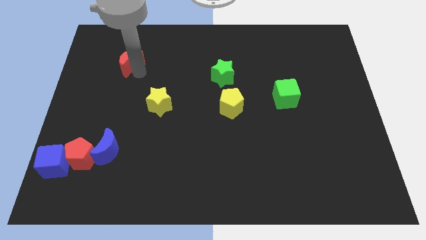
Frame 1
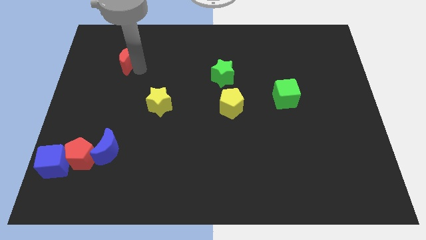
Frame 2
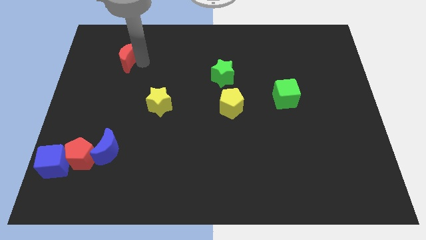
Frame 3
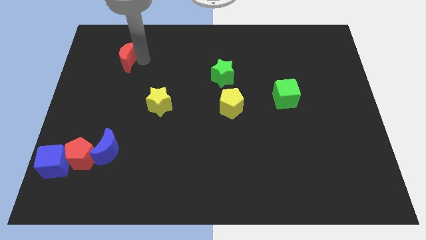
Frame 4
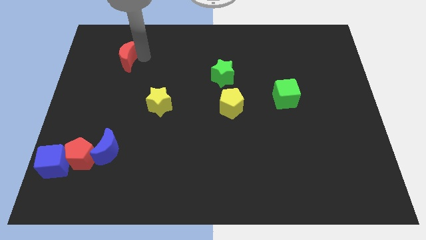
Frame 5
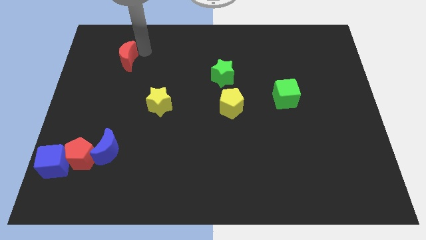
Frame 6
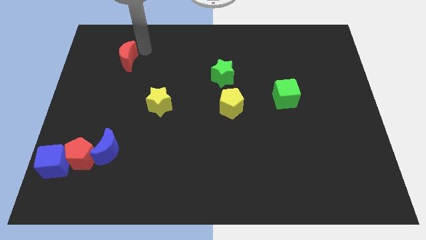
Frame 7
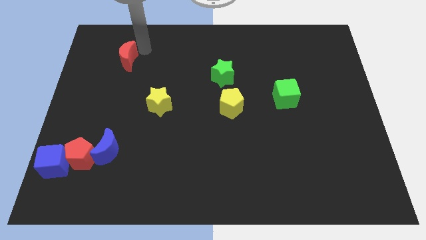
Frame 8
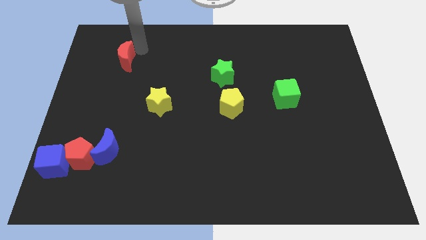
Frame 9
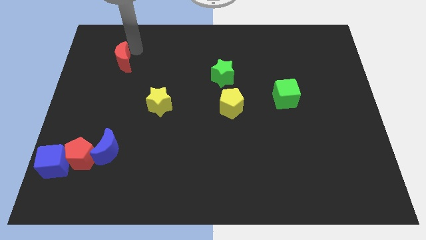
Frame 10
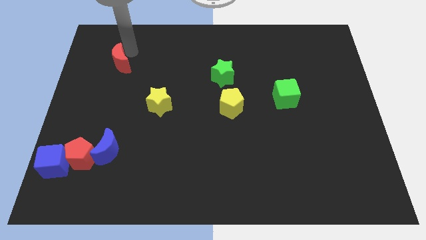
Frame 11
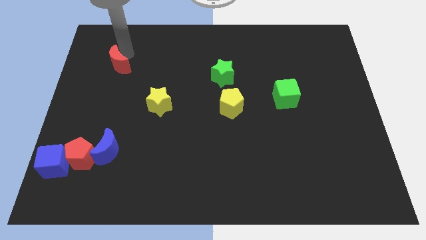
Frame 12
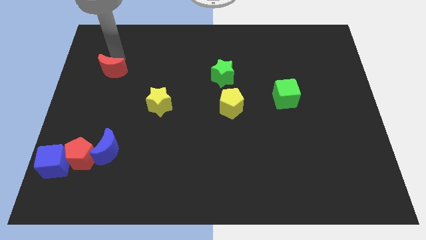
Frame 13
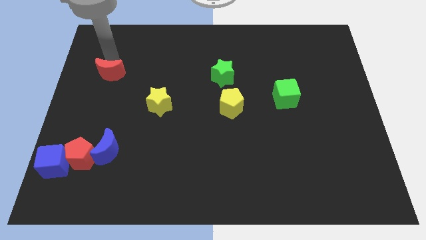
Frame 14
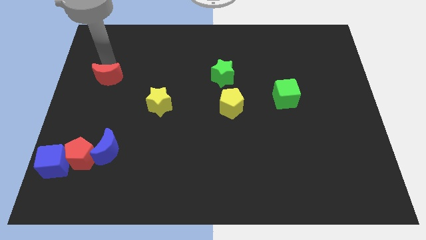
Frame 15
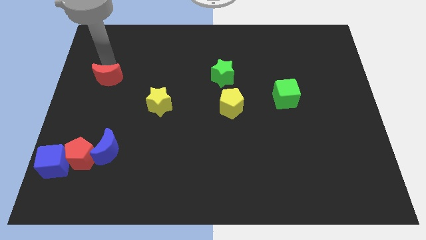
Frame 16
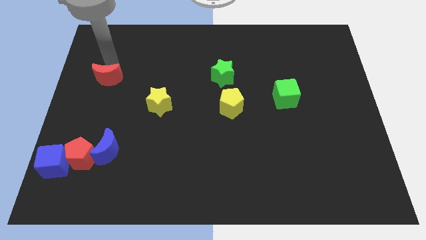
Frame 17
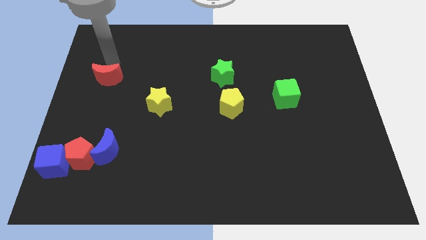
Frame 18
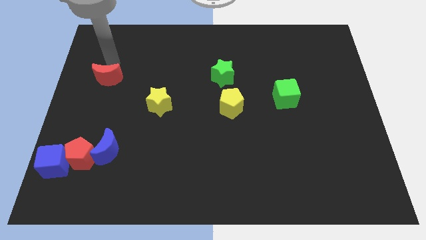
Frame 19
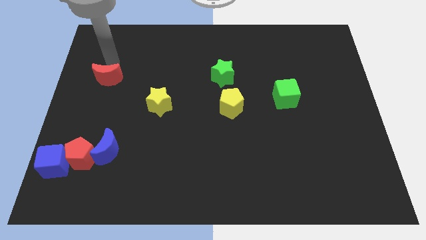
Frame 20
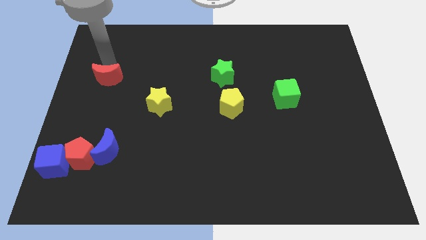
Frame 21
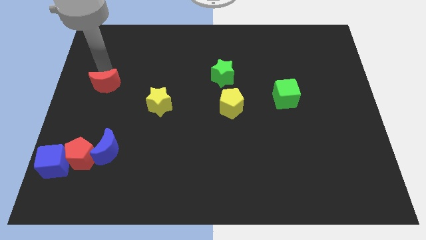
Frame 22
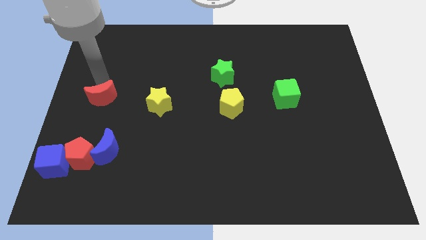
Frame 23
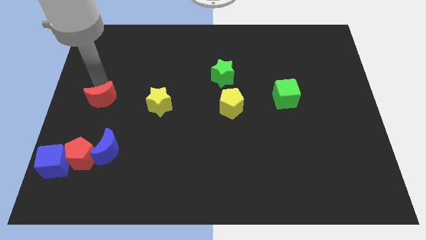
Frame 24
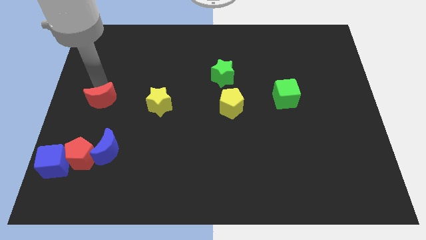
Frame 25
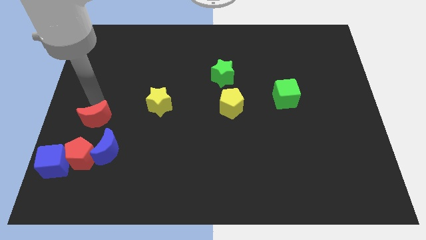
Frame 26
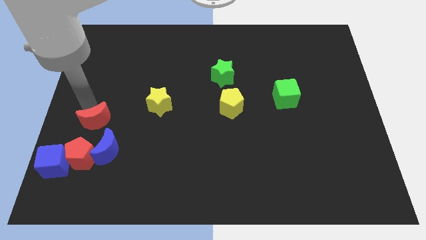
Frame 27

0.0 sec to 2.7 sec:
push the red crescent towards the blue crescent

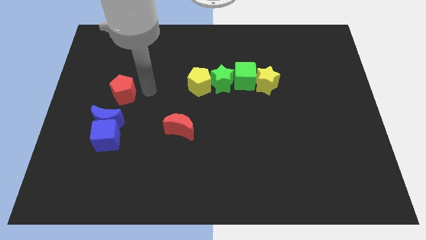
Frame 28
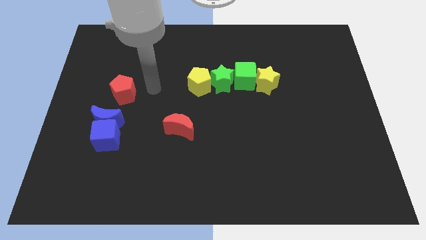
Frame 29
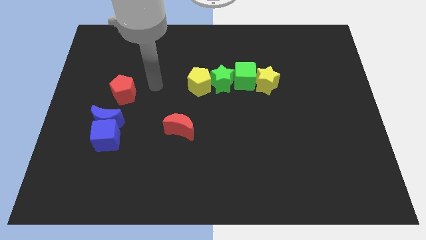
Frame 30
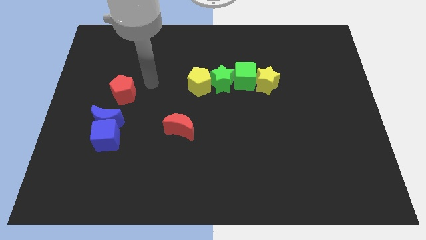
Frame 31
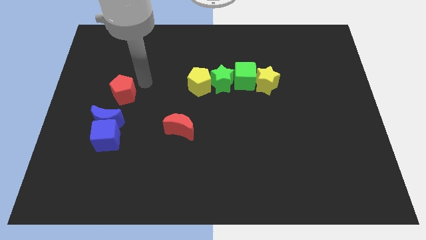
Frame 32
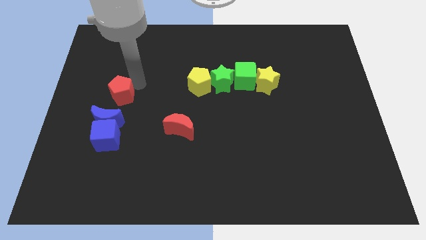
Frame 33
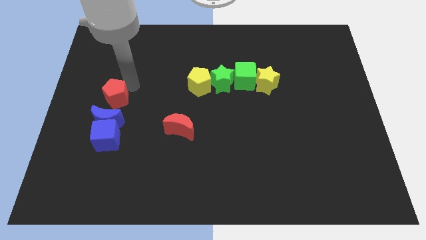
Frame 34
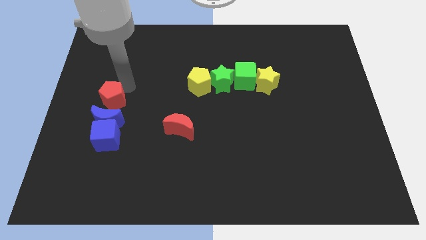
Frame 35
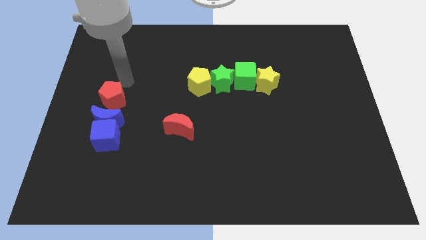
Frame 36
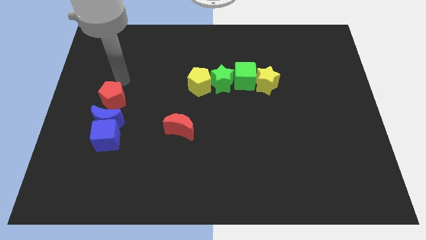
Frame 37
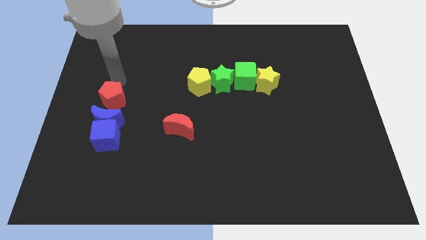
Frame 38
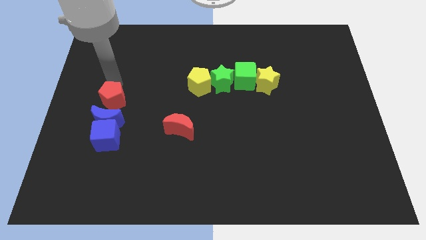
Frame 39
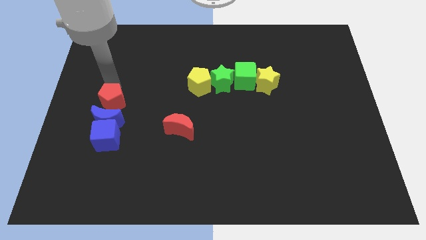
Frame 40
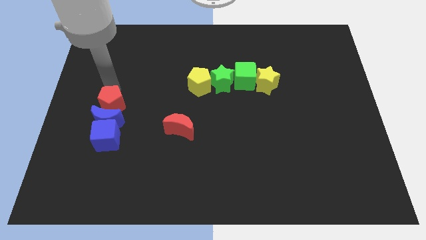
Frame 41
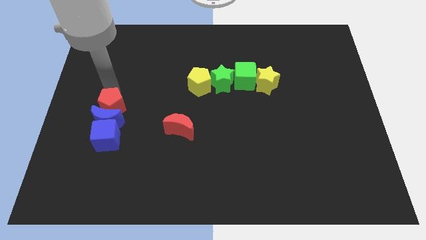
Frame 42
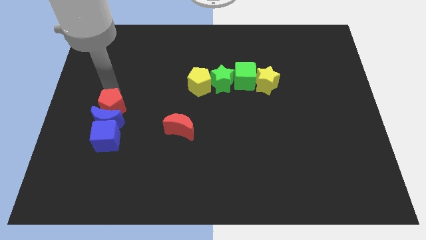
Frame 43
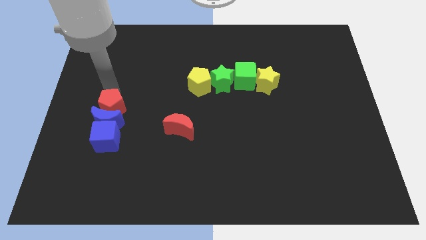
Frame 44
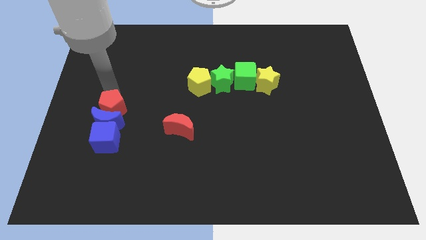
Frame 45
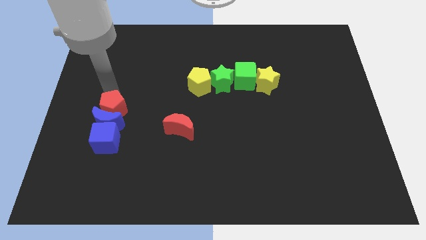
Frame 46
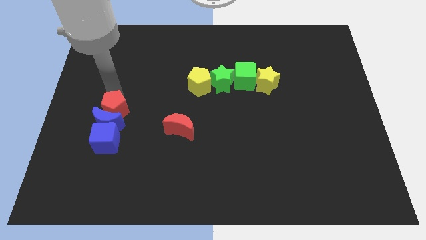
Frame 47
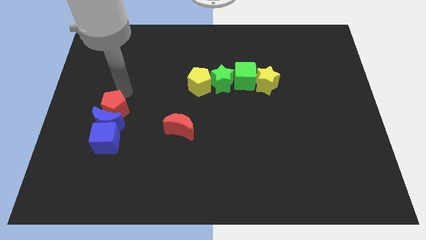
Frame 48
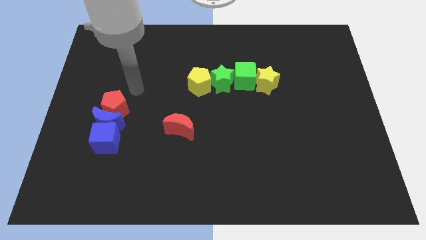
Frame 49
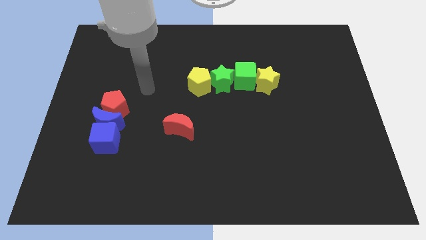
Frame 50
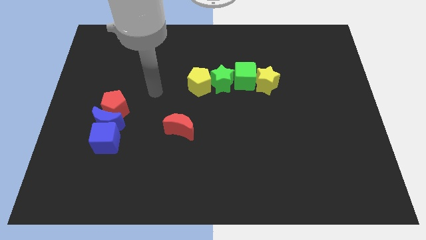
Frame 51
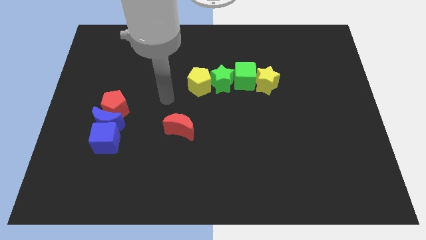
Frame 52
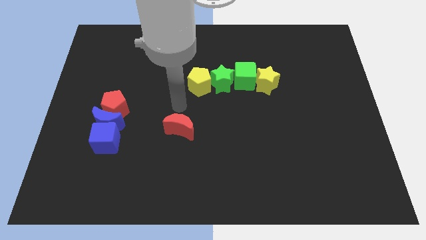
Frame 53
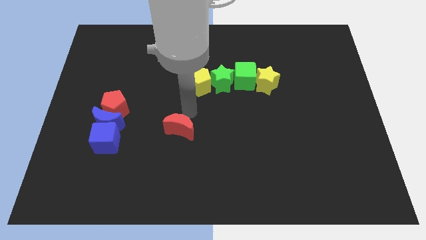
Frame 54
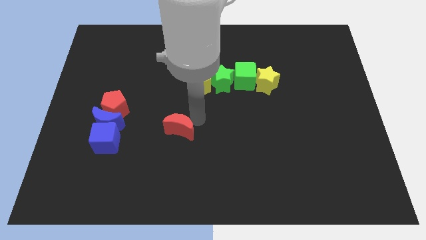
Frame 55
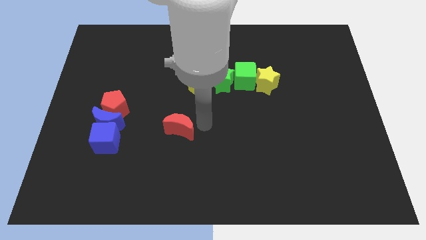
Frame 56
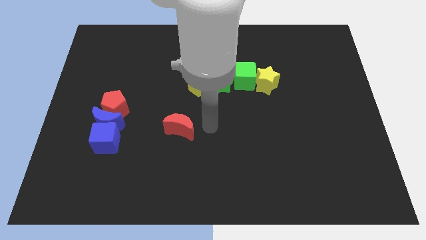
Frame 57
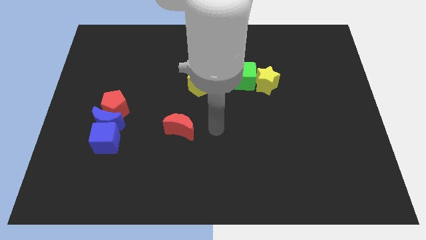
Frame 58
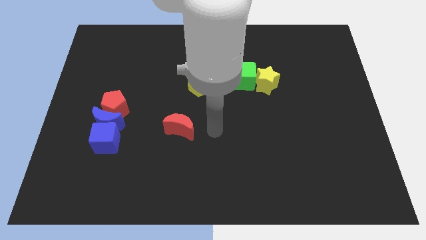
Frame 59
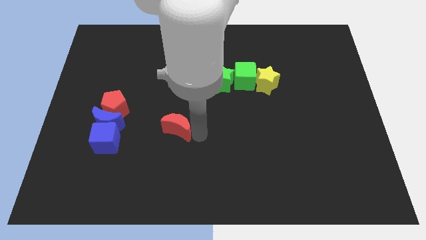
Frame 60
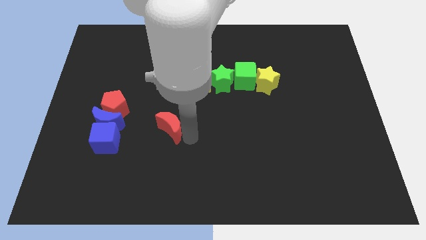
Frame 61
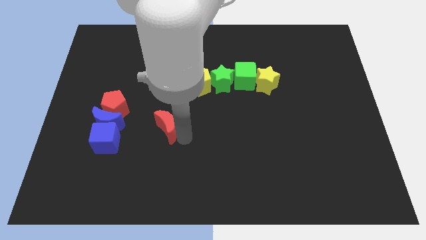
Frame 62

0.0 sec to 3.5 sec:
slide the red pentagon into the blue crescent

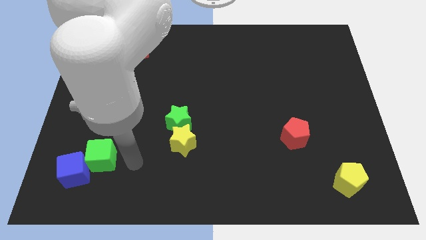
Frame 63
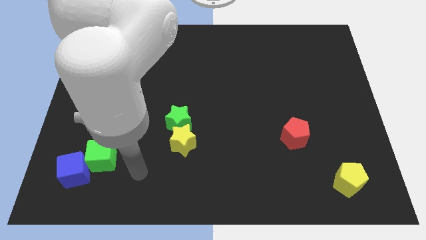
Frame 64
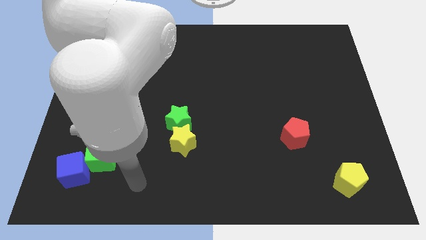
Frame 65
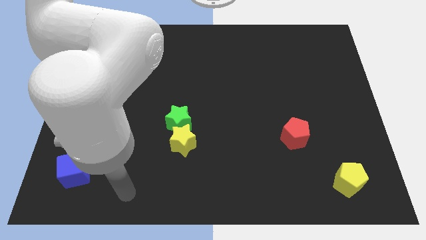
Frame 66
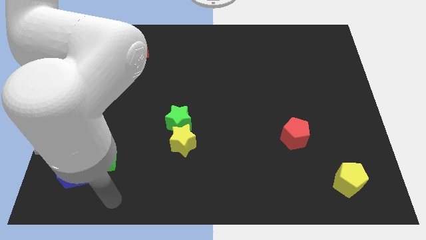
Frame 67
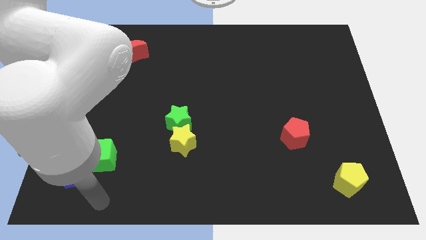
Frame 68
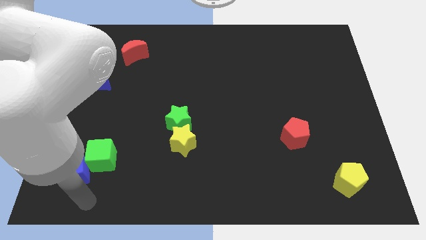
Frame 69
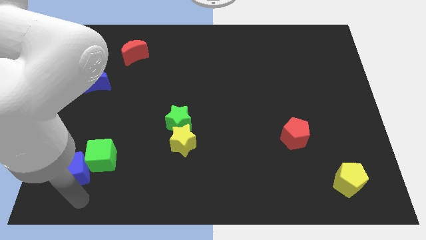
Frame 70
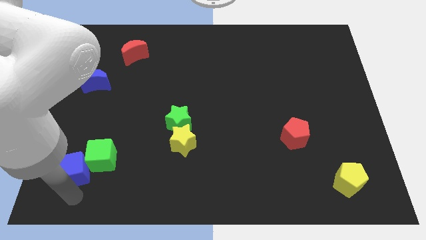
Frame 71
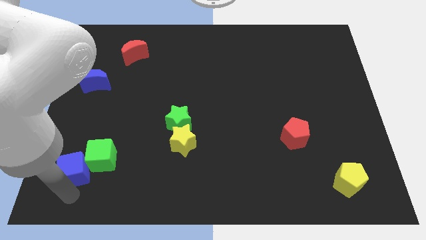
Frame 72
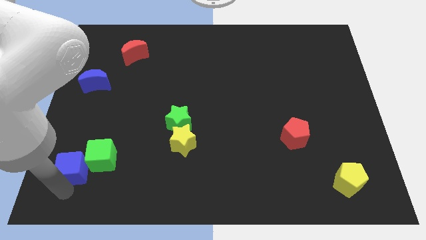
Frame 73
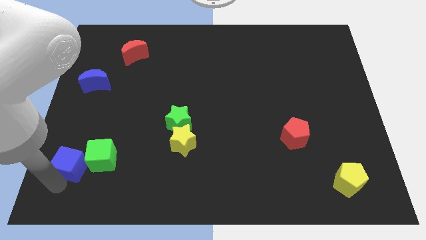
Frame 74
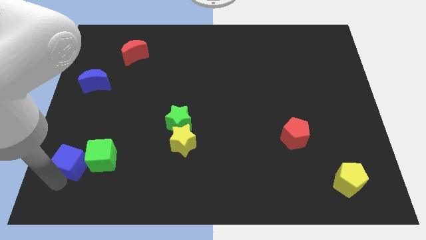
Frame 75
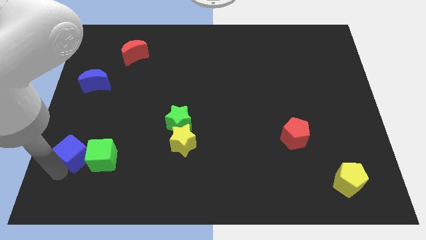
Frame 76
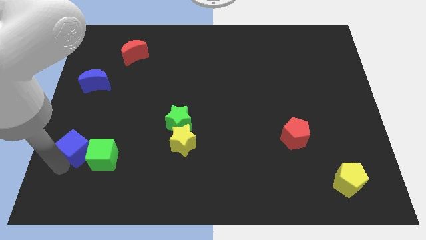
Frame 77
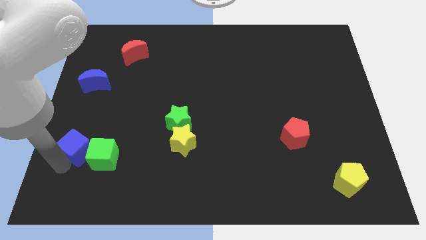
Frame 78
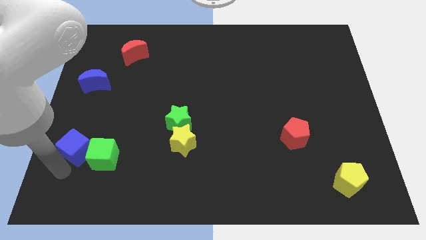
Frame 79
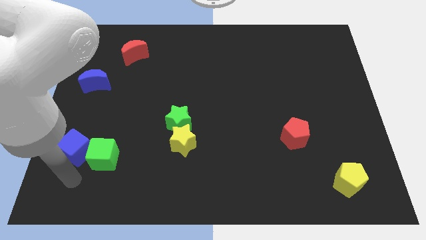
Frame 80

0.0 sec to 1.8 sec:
slightly push the blue cube to the left of green cube

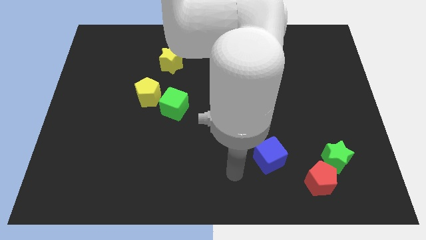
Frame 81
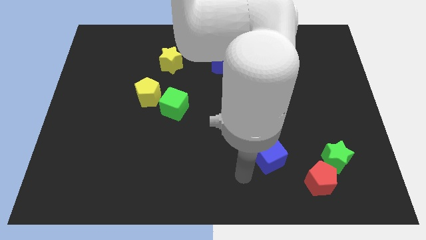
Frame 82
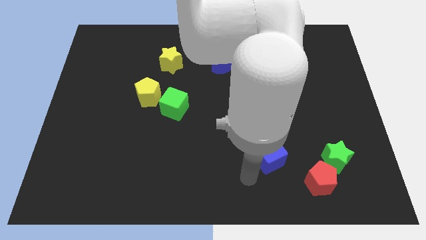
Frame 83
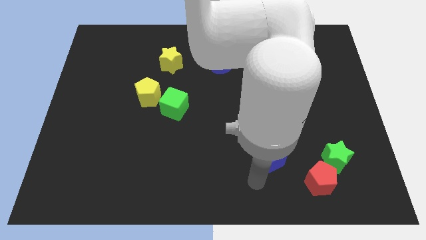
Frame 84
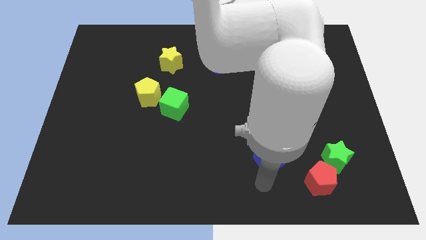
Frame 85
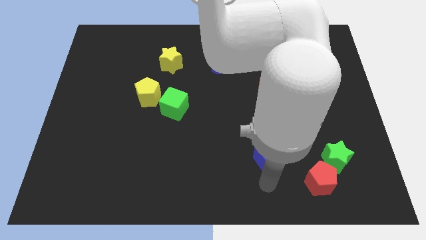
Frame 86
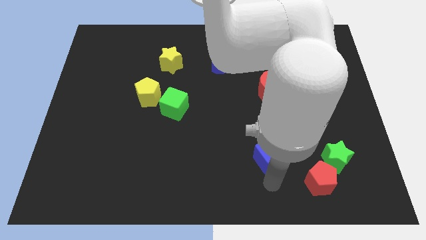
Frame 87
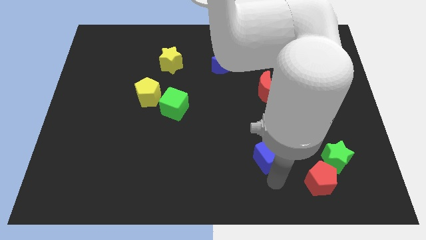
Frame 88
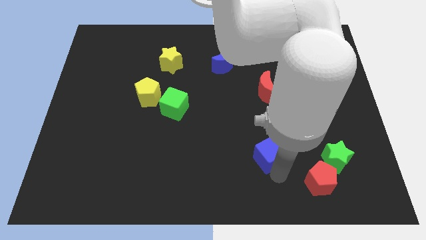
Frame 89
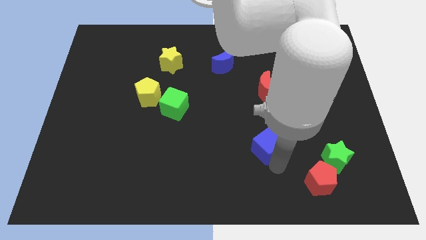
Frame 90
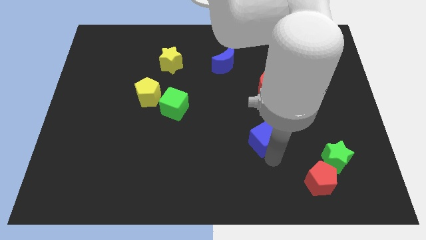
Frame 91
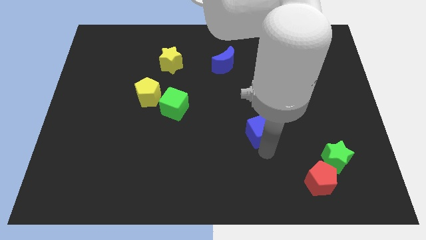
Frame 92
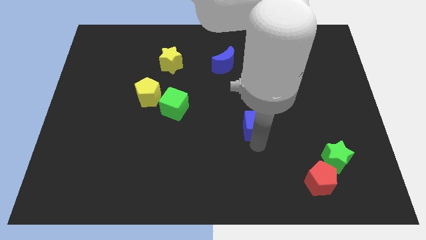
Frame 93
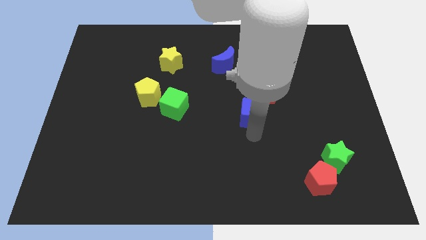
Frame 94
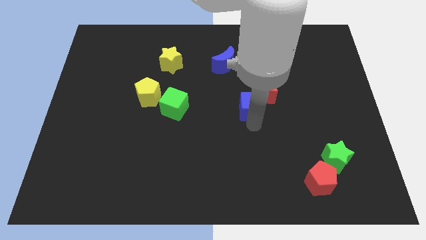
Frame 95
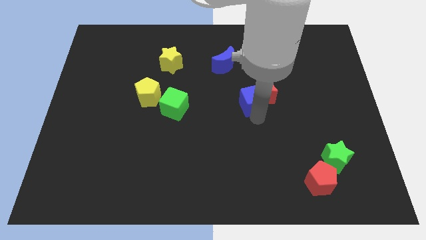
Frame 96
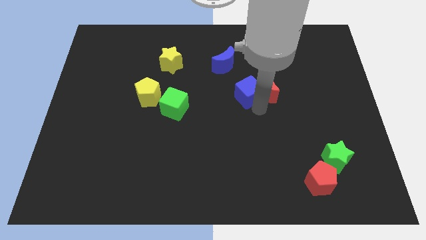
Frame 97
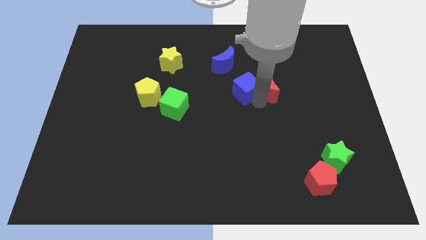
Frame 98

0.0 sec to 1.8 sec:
push the blue cube into the red moon
